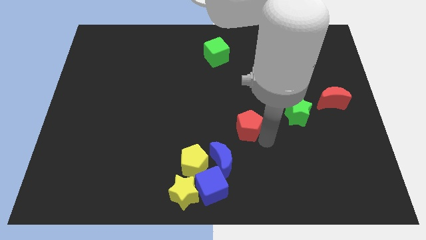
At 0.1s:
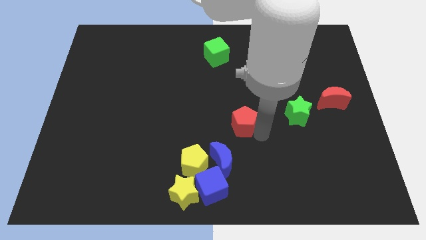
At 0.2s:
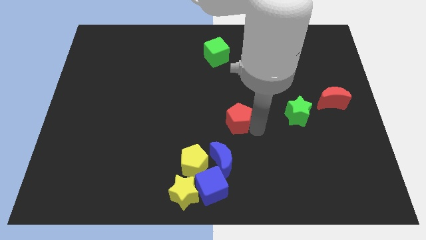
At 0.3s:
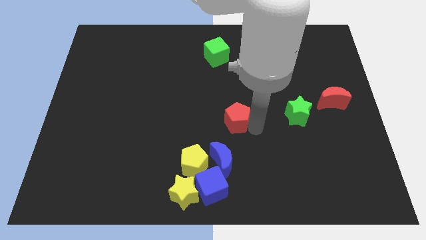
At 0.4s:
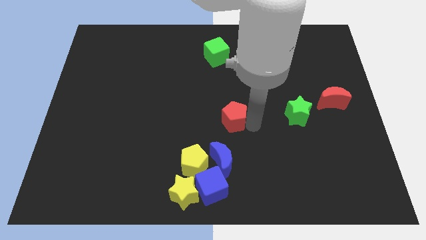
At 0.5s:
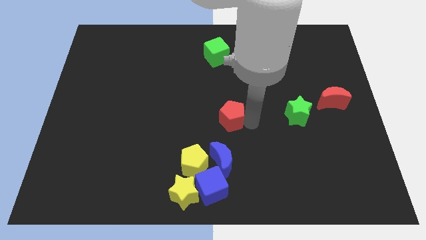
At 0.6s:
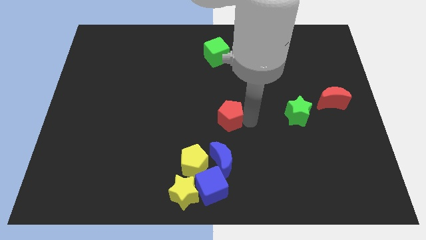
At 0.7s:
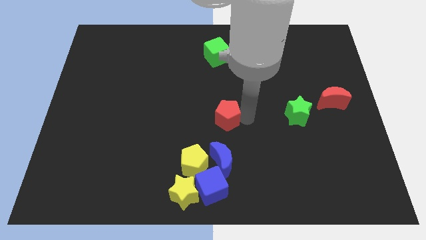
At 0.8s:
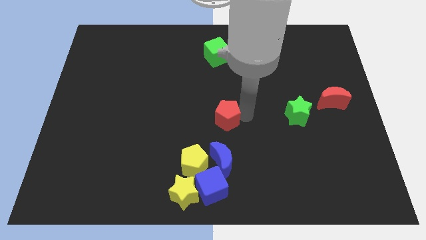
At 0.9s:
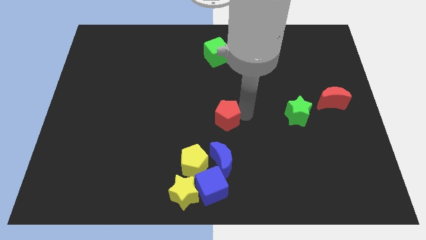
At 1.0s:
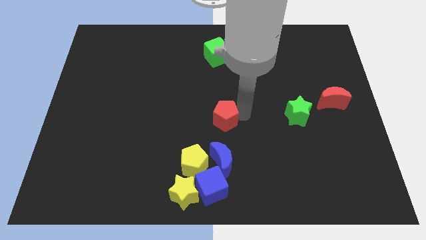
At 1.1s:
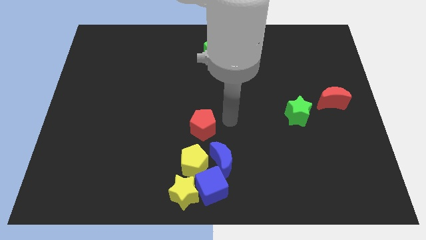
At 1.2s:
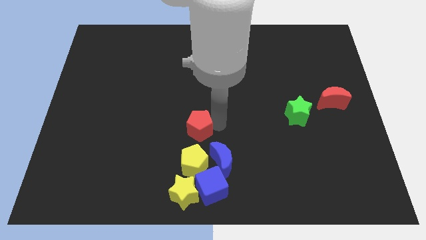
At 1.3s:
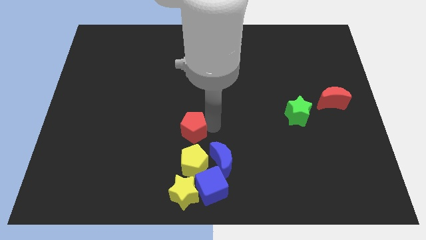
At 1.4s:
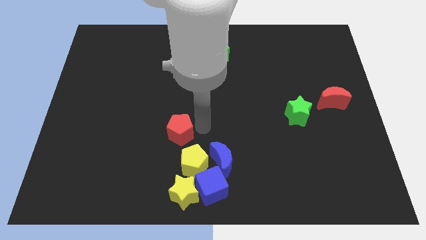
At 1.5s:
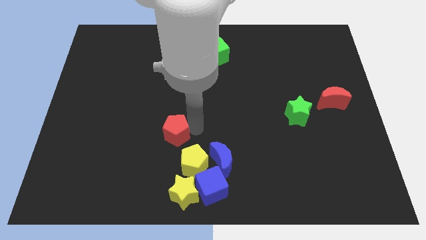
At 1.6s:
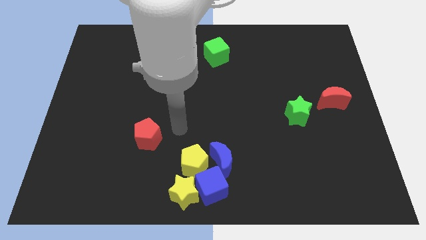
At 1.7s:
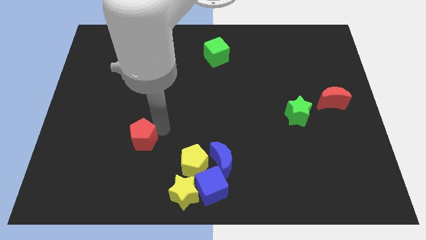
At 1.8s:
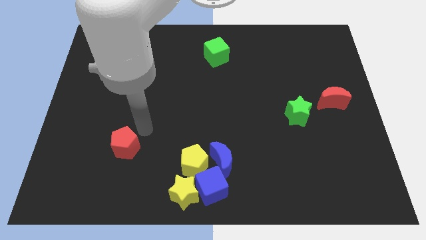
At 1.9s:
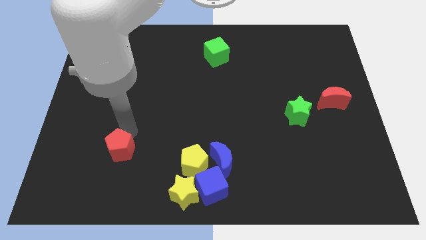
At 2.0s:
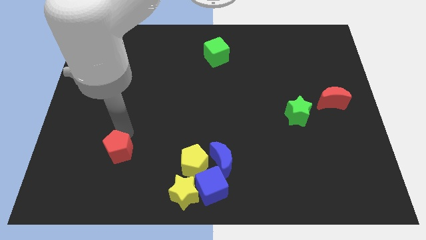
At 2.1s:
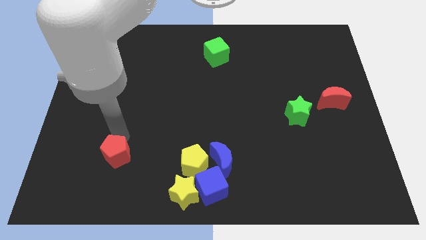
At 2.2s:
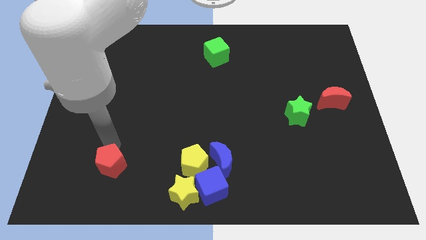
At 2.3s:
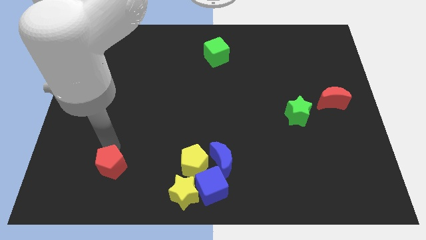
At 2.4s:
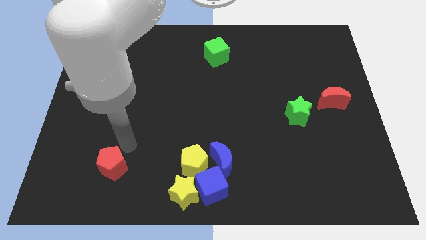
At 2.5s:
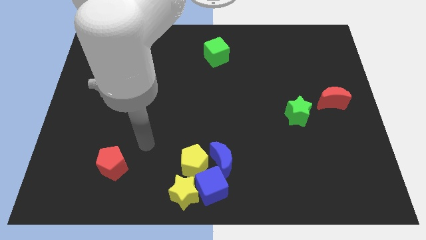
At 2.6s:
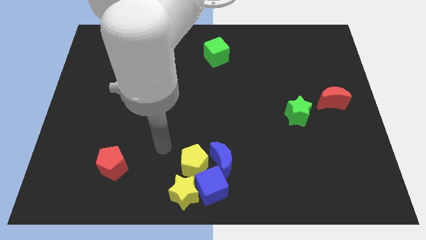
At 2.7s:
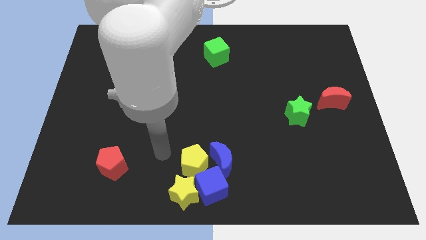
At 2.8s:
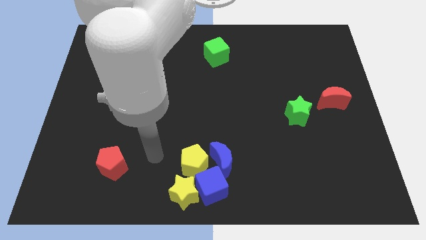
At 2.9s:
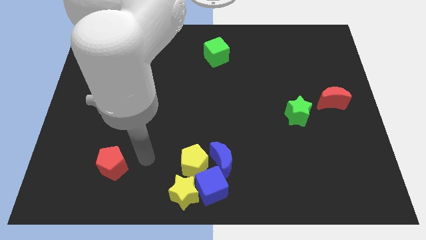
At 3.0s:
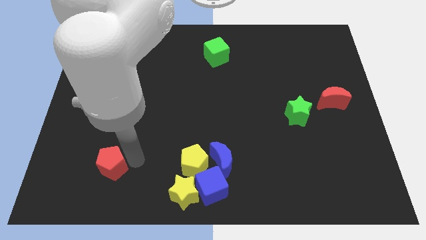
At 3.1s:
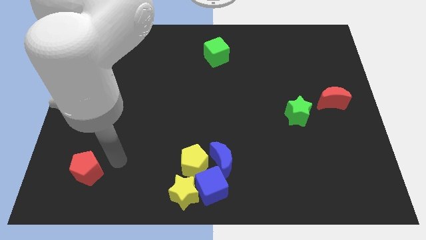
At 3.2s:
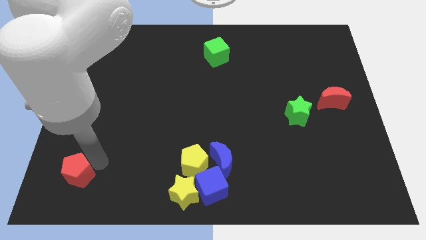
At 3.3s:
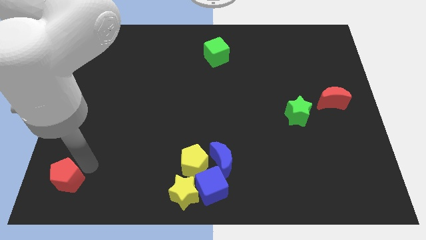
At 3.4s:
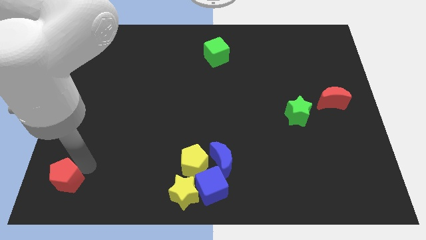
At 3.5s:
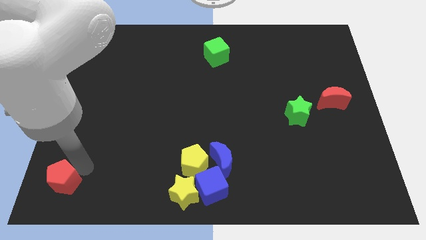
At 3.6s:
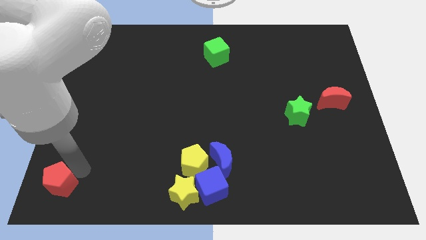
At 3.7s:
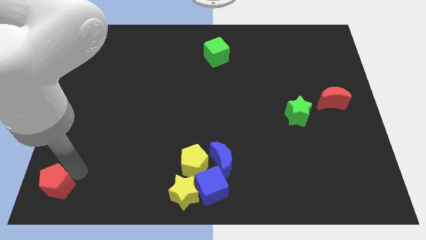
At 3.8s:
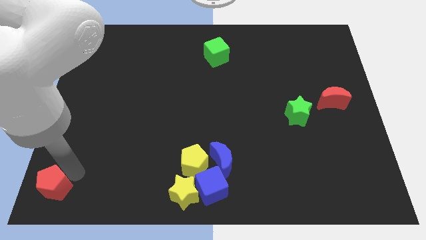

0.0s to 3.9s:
place the red pentagon parallel to yellow star

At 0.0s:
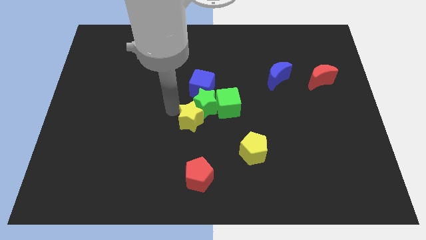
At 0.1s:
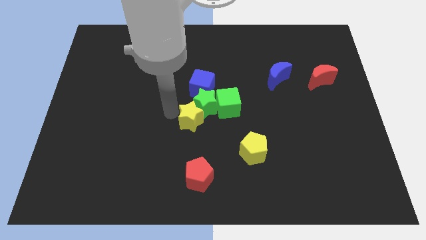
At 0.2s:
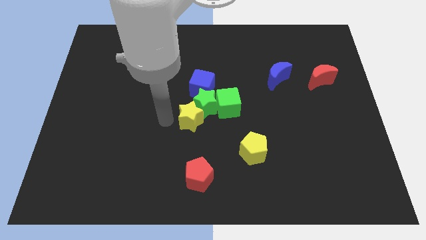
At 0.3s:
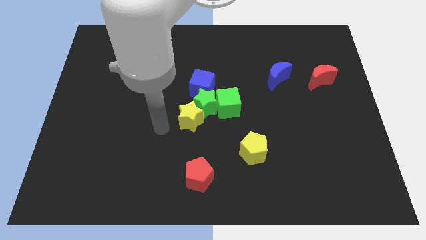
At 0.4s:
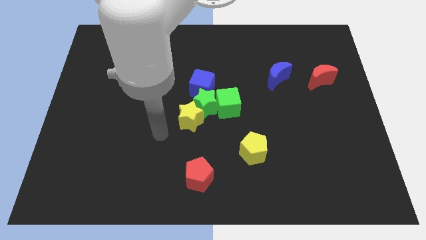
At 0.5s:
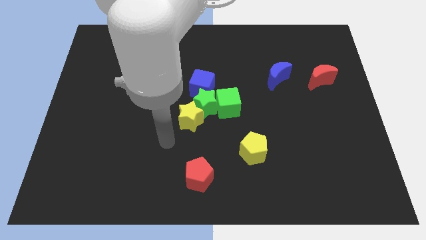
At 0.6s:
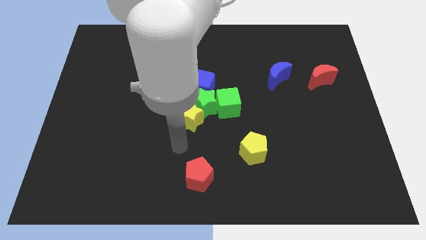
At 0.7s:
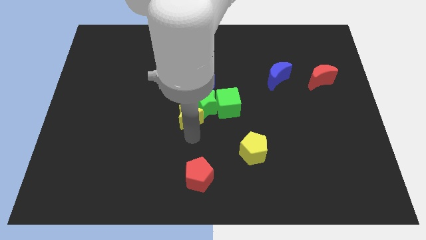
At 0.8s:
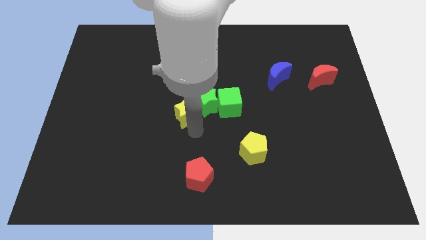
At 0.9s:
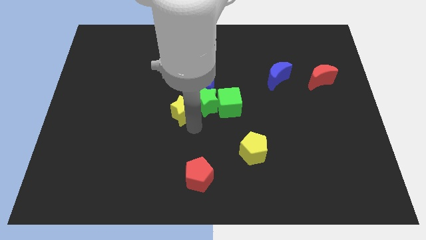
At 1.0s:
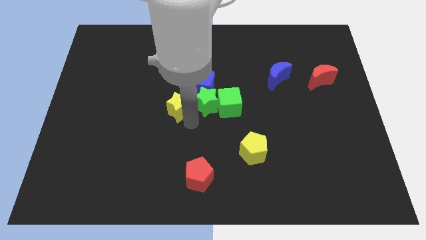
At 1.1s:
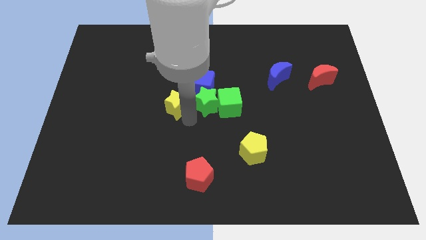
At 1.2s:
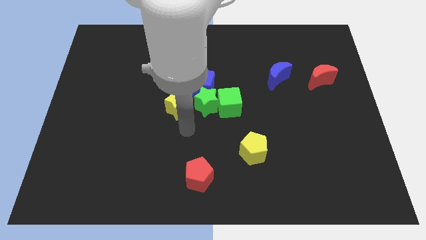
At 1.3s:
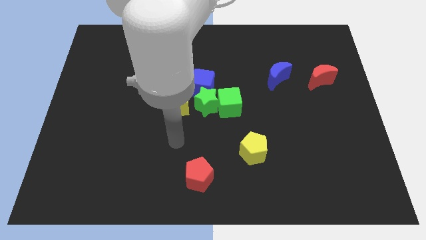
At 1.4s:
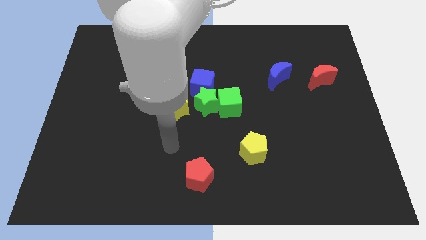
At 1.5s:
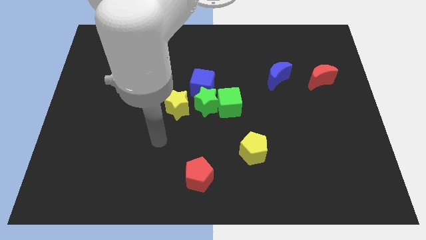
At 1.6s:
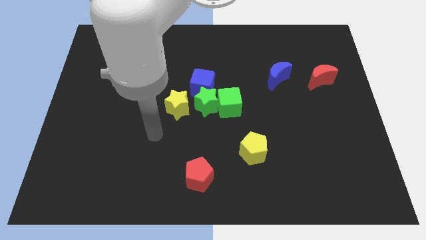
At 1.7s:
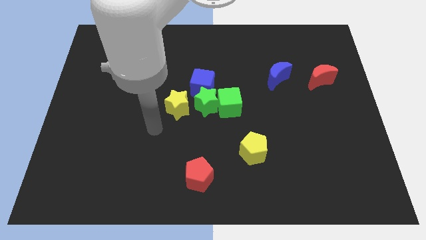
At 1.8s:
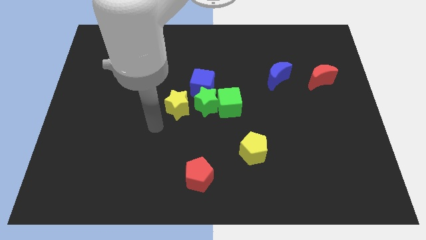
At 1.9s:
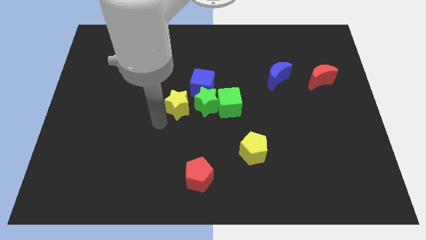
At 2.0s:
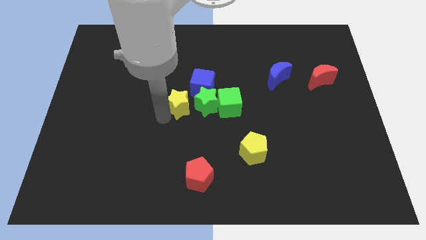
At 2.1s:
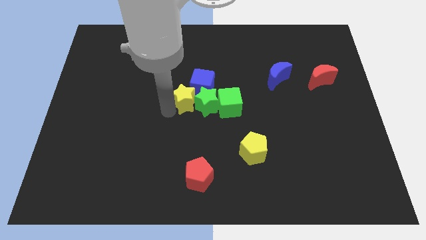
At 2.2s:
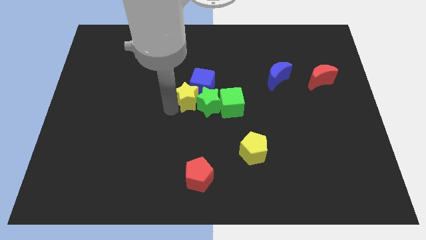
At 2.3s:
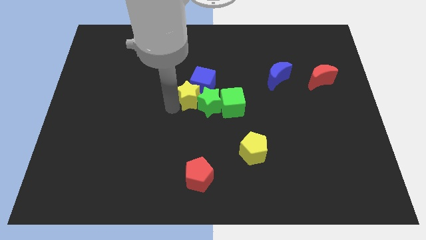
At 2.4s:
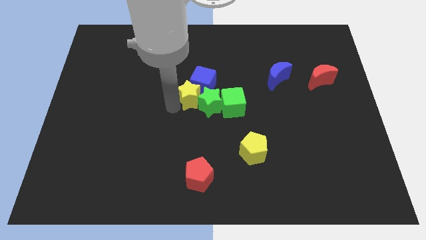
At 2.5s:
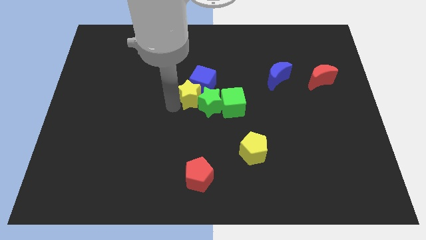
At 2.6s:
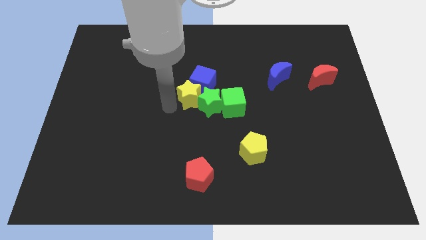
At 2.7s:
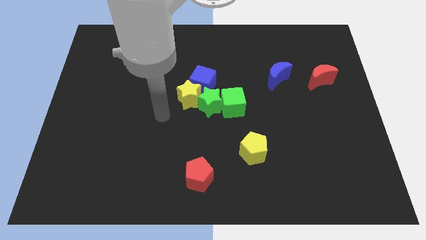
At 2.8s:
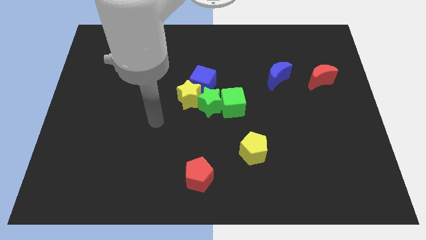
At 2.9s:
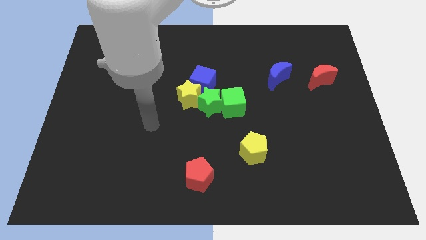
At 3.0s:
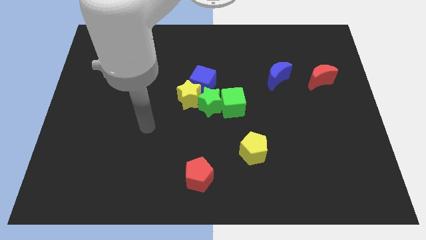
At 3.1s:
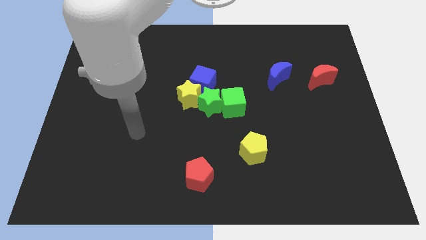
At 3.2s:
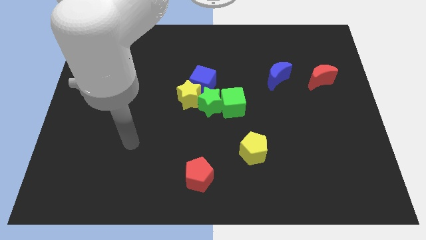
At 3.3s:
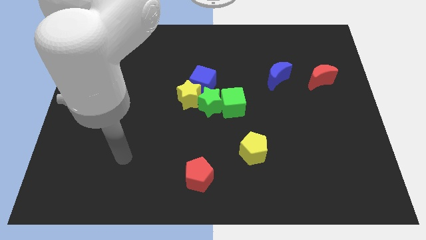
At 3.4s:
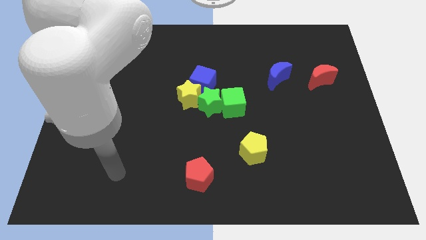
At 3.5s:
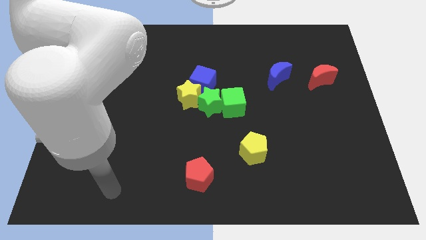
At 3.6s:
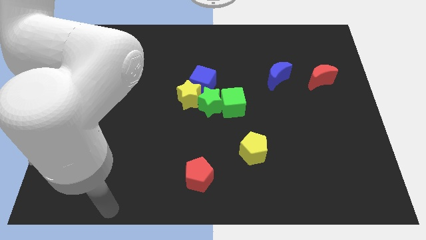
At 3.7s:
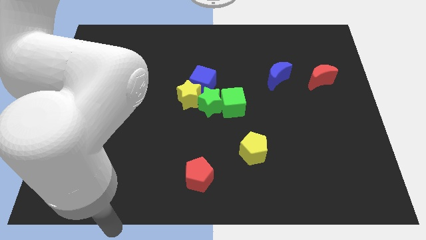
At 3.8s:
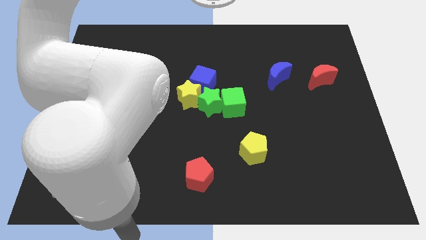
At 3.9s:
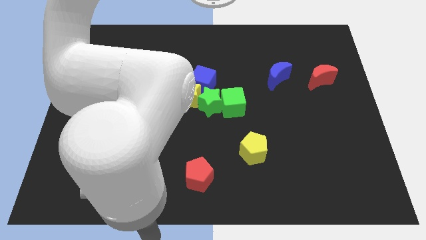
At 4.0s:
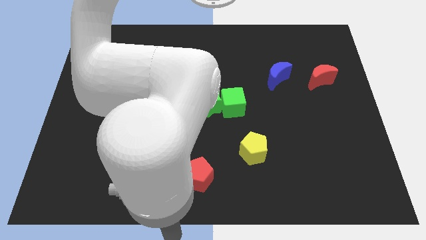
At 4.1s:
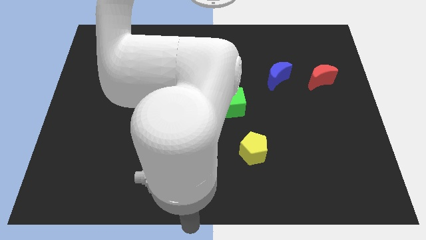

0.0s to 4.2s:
push the yellow star into the blue cube

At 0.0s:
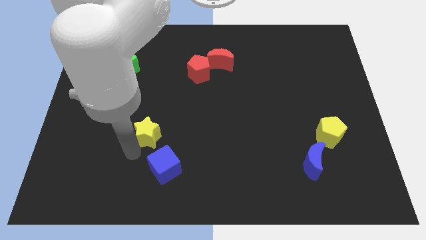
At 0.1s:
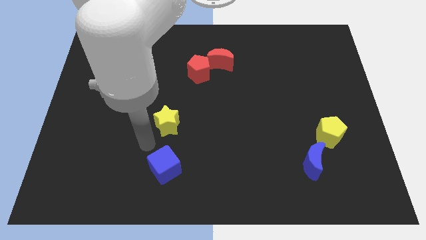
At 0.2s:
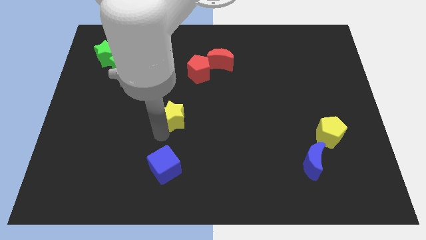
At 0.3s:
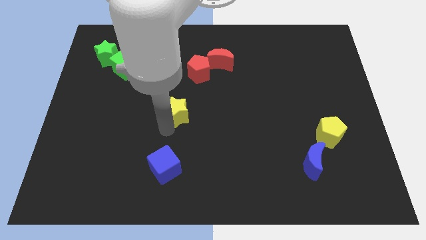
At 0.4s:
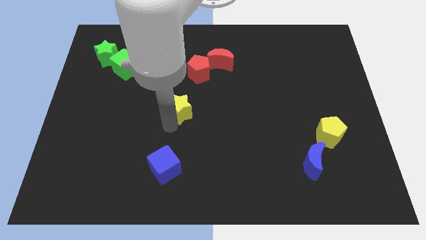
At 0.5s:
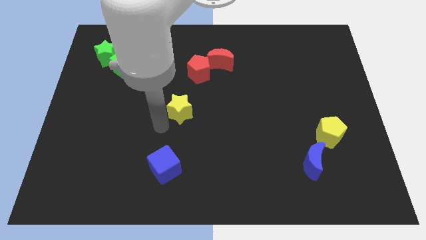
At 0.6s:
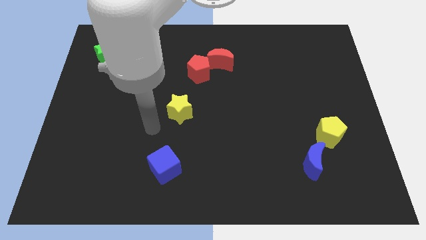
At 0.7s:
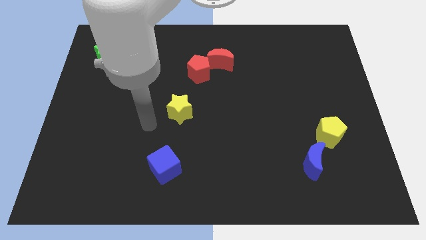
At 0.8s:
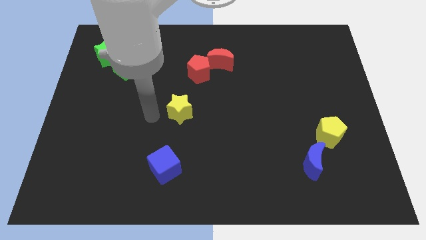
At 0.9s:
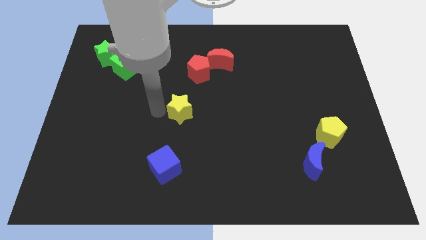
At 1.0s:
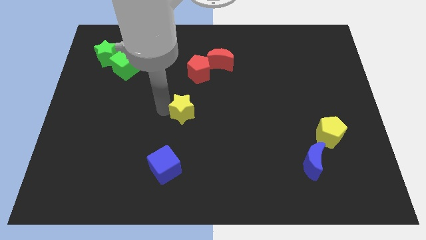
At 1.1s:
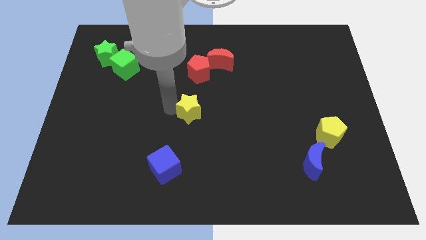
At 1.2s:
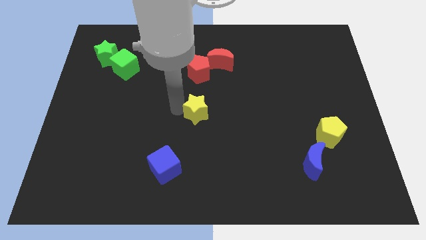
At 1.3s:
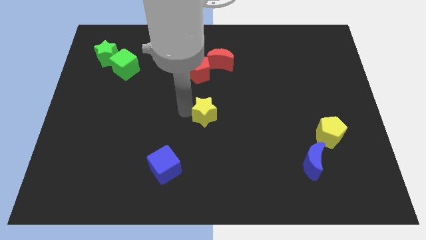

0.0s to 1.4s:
push yellow star towards middle of the board
